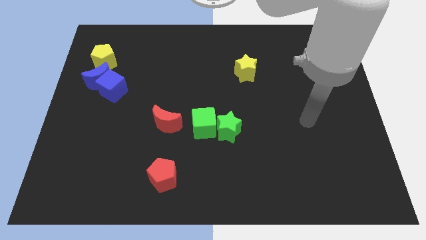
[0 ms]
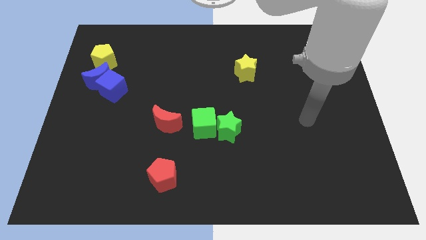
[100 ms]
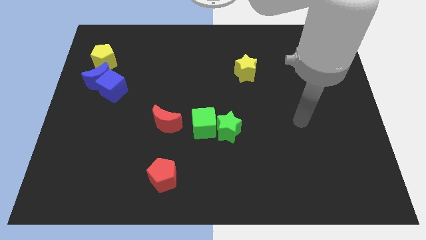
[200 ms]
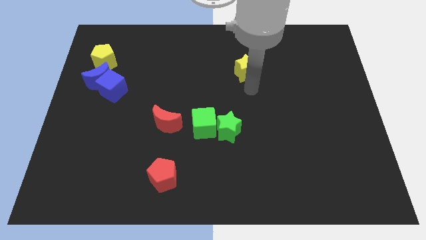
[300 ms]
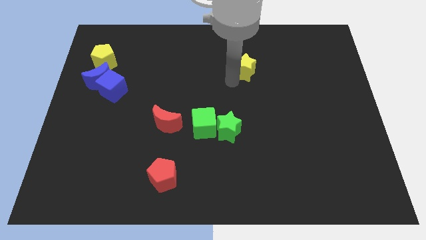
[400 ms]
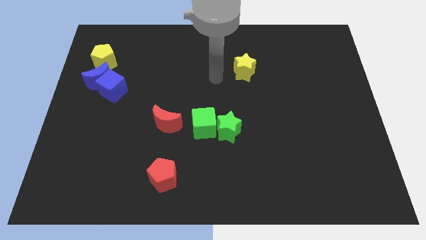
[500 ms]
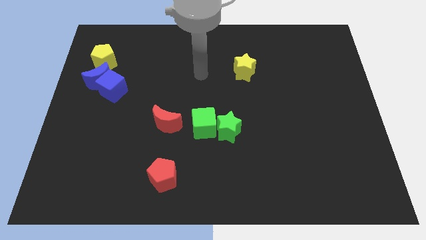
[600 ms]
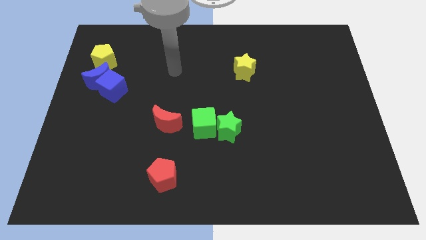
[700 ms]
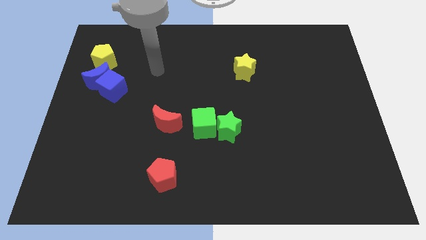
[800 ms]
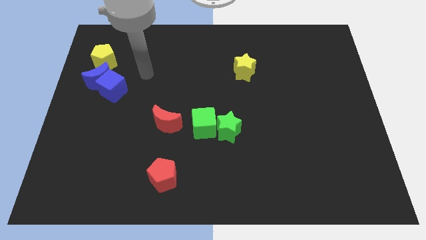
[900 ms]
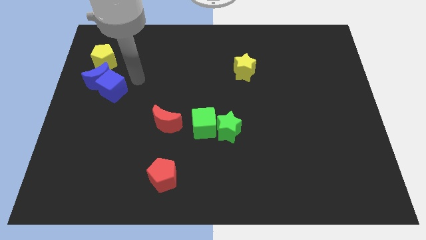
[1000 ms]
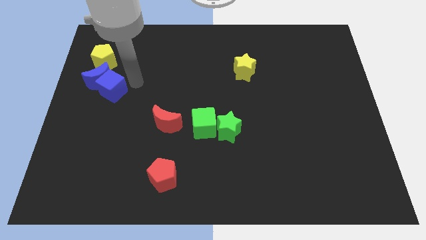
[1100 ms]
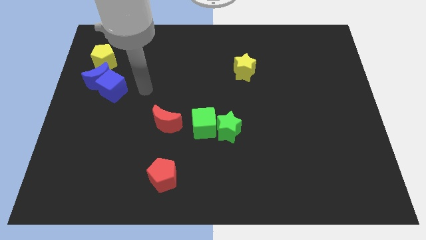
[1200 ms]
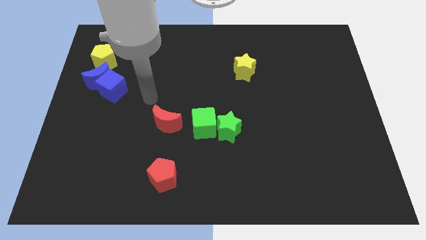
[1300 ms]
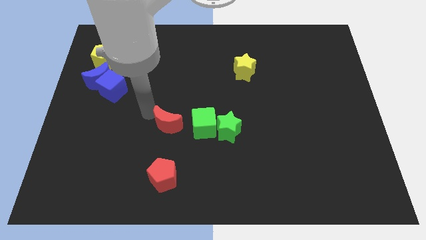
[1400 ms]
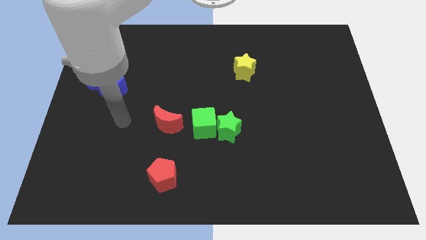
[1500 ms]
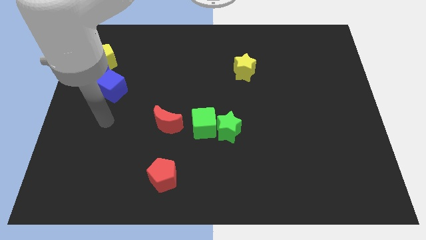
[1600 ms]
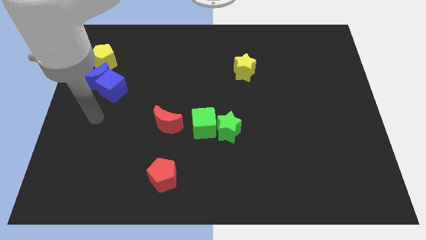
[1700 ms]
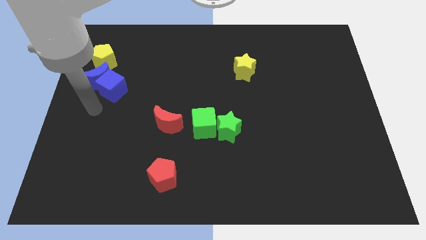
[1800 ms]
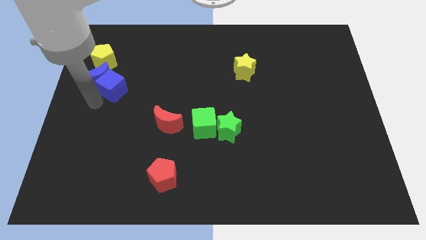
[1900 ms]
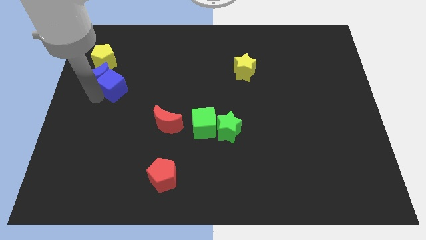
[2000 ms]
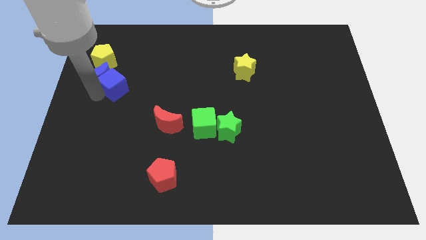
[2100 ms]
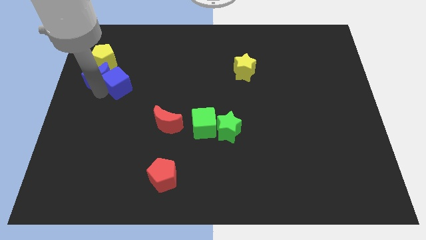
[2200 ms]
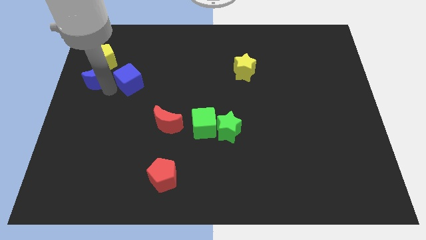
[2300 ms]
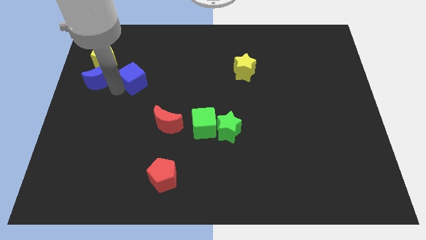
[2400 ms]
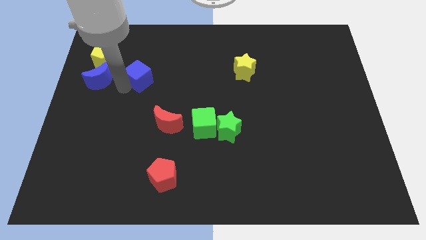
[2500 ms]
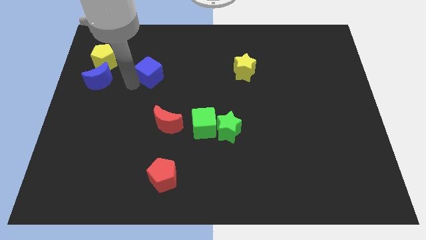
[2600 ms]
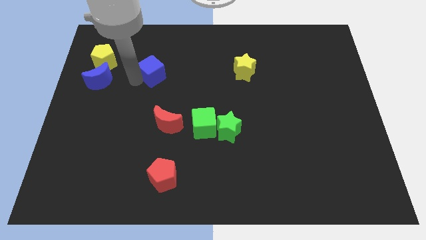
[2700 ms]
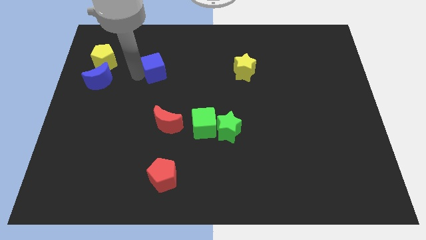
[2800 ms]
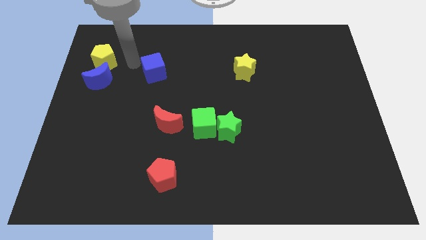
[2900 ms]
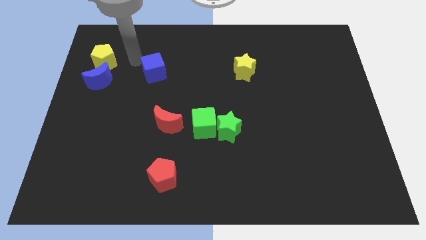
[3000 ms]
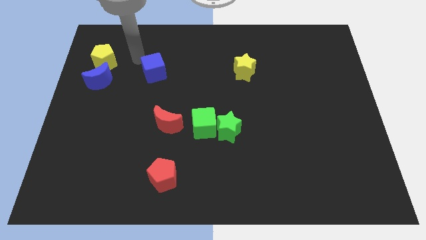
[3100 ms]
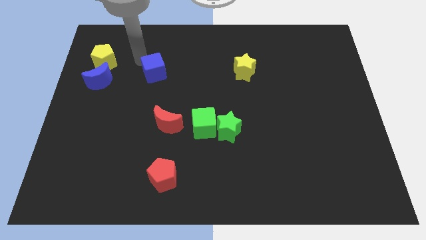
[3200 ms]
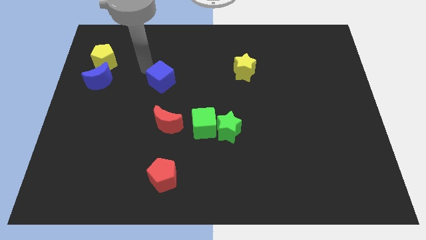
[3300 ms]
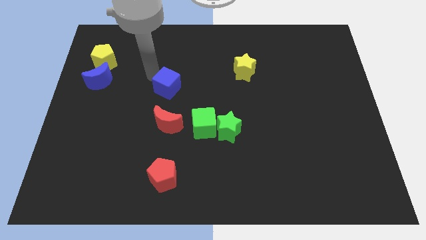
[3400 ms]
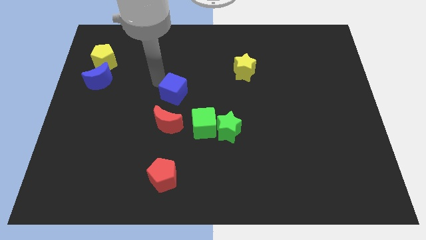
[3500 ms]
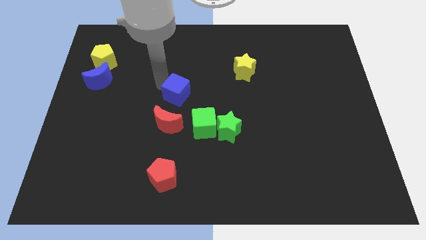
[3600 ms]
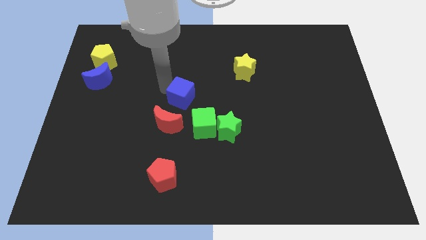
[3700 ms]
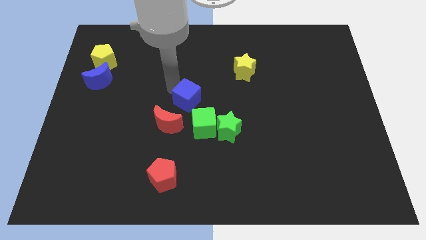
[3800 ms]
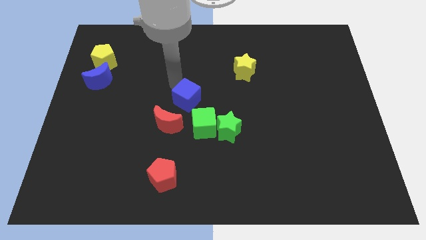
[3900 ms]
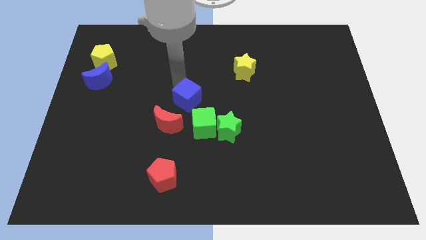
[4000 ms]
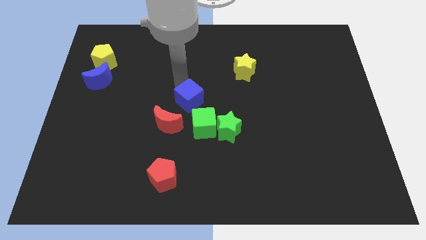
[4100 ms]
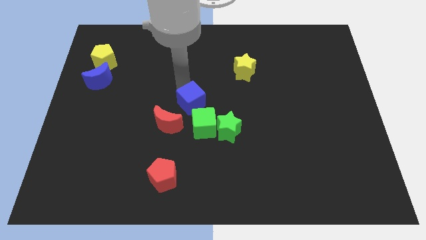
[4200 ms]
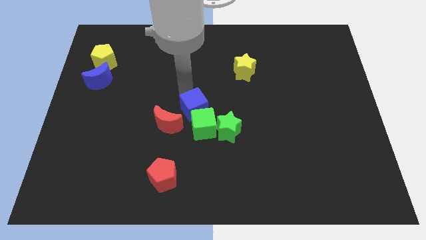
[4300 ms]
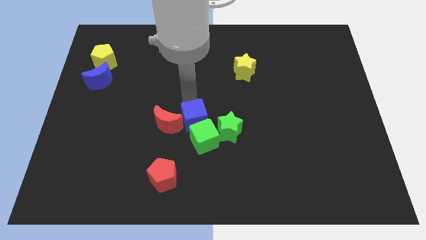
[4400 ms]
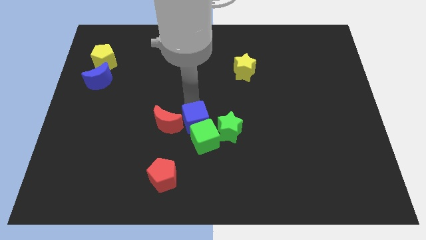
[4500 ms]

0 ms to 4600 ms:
push the blue cube to the green cube

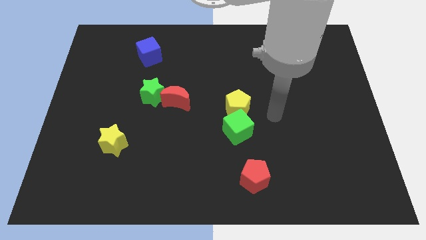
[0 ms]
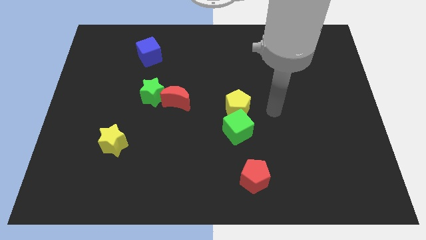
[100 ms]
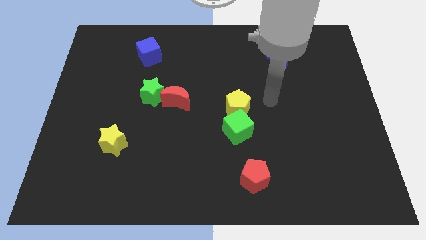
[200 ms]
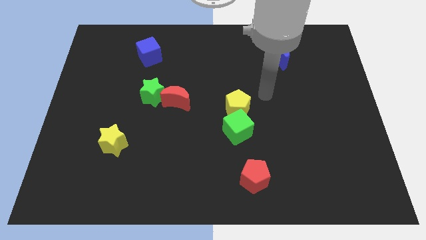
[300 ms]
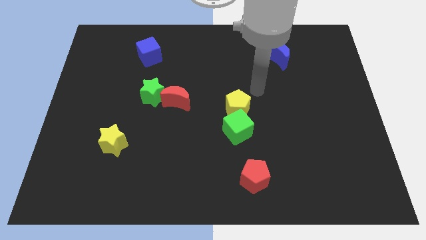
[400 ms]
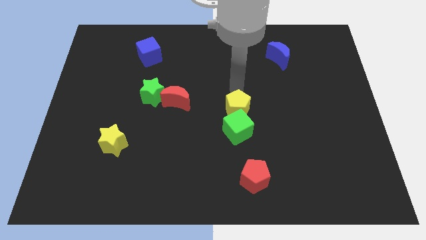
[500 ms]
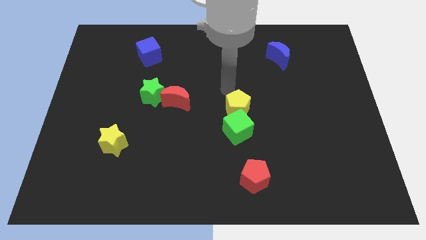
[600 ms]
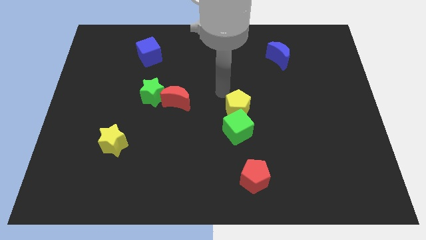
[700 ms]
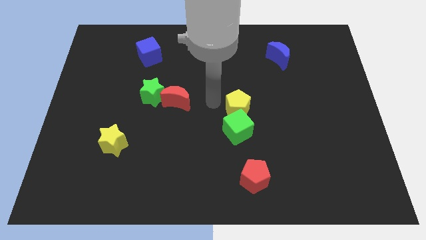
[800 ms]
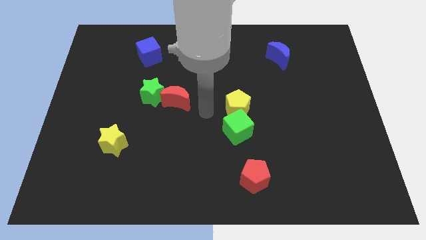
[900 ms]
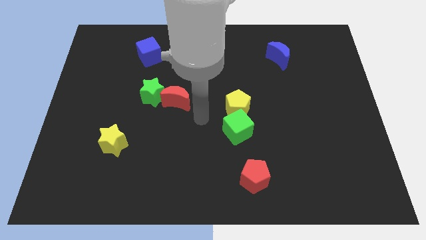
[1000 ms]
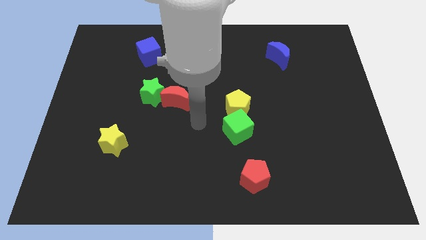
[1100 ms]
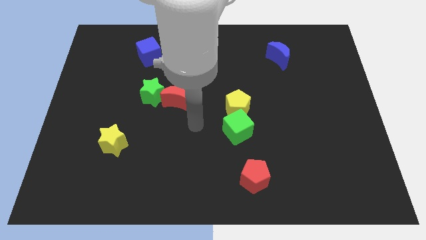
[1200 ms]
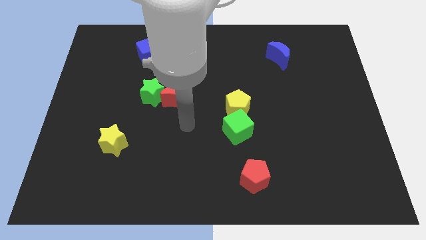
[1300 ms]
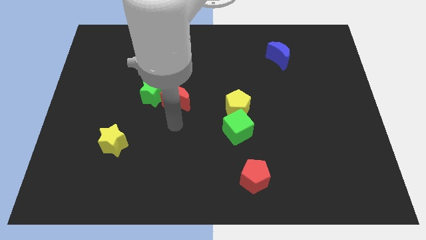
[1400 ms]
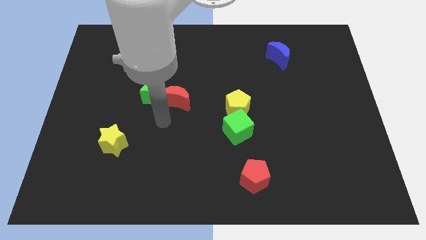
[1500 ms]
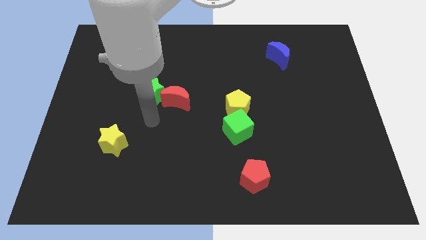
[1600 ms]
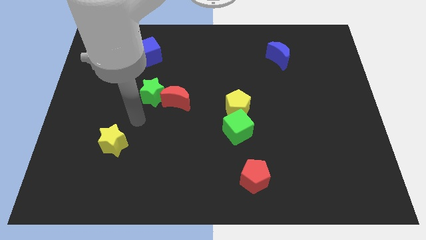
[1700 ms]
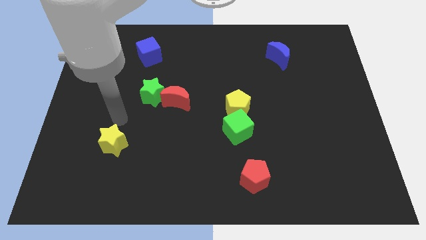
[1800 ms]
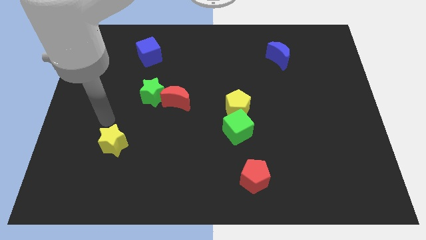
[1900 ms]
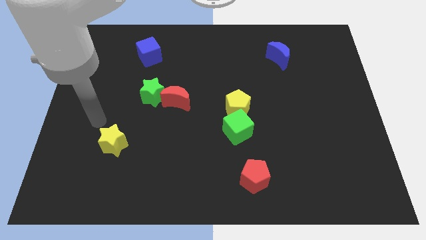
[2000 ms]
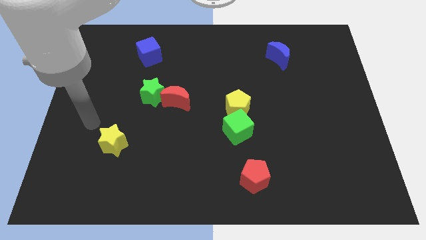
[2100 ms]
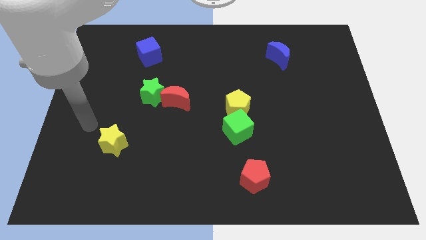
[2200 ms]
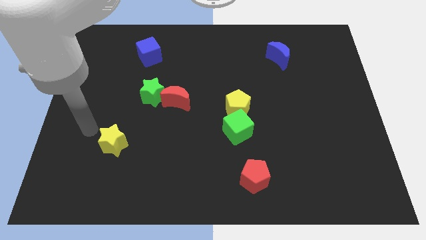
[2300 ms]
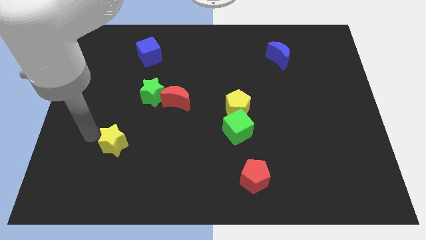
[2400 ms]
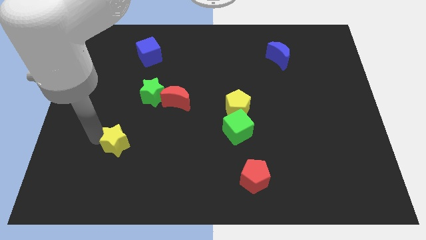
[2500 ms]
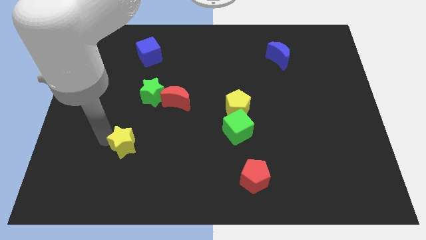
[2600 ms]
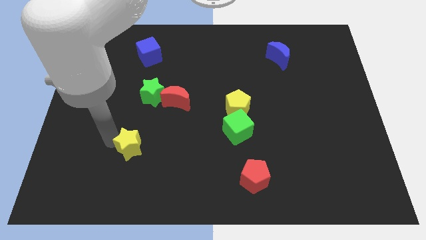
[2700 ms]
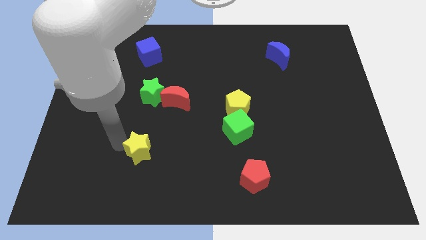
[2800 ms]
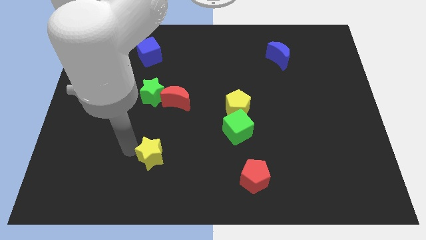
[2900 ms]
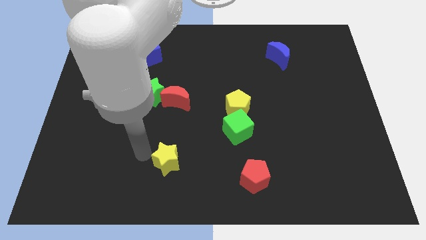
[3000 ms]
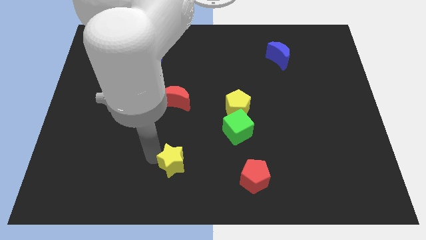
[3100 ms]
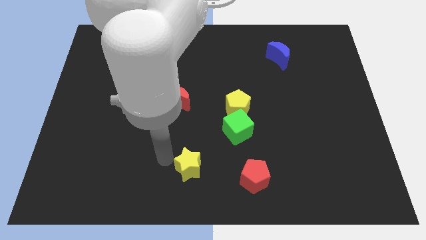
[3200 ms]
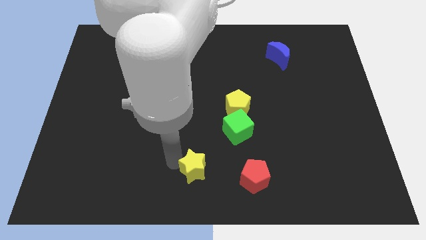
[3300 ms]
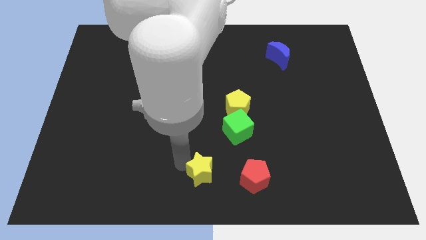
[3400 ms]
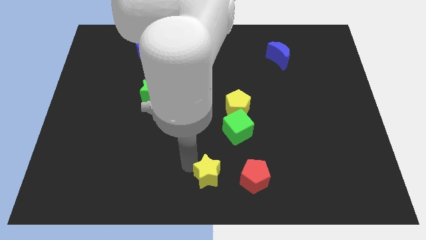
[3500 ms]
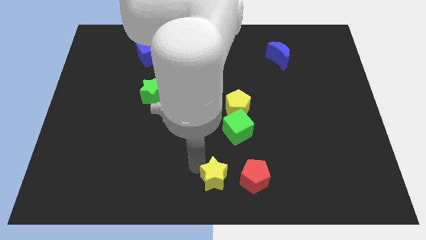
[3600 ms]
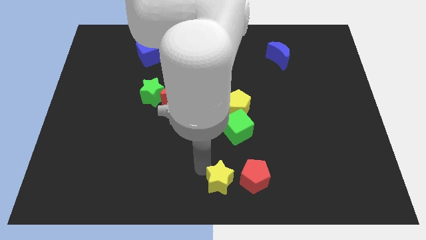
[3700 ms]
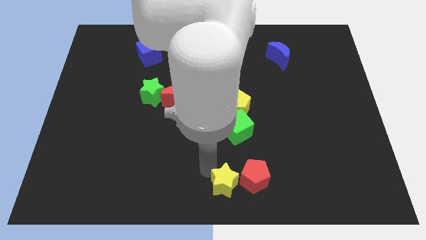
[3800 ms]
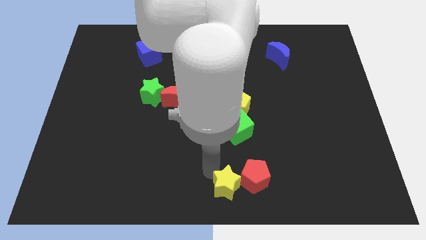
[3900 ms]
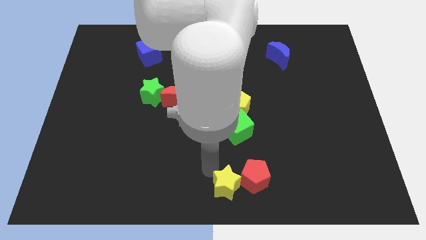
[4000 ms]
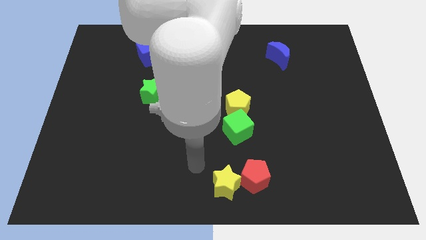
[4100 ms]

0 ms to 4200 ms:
move the yellow star towards the red pentagon
